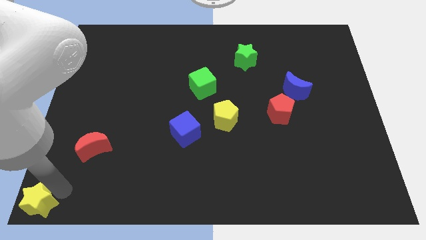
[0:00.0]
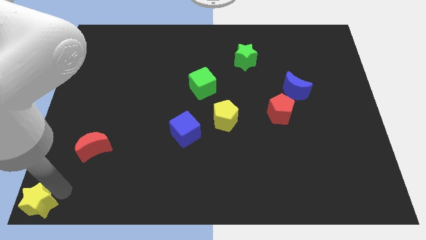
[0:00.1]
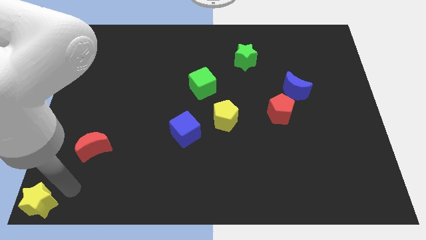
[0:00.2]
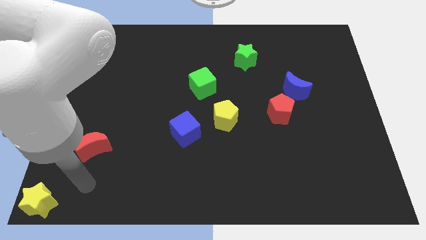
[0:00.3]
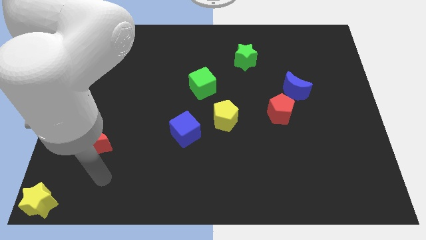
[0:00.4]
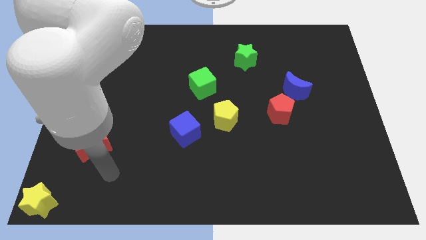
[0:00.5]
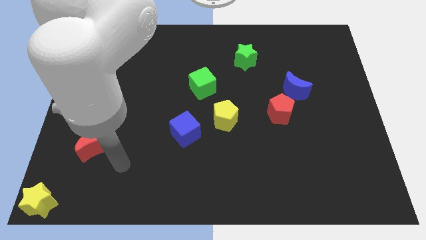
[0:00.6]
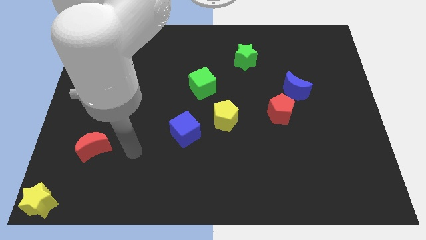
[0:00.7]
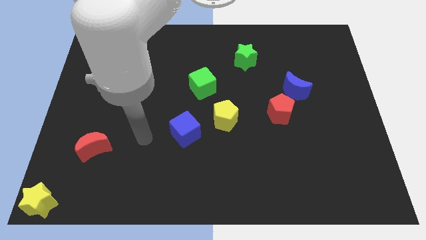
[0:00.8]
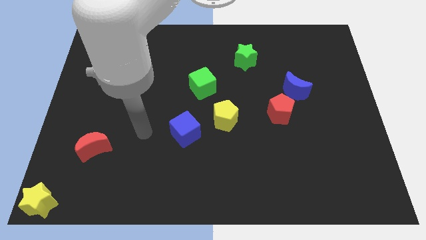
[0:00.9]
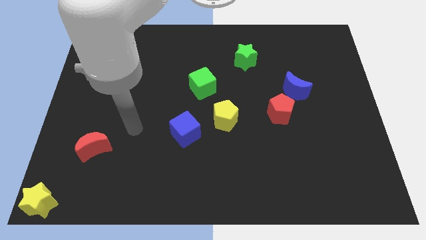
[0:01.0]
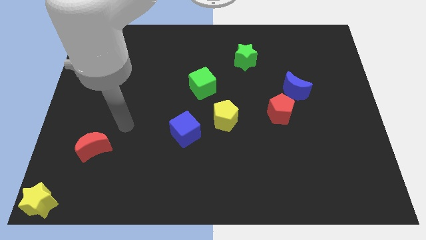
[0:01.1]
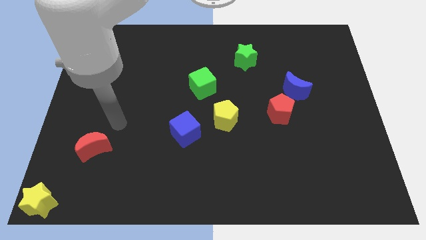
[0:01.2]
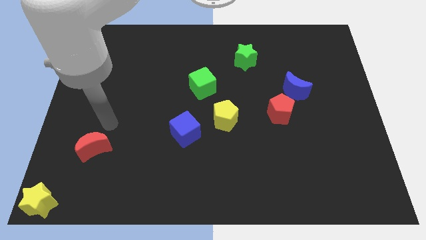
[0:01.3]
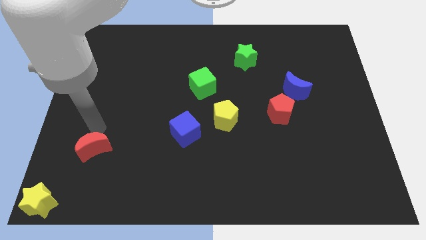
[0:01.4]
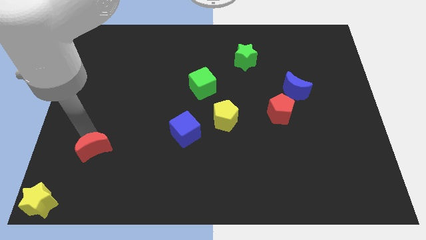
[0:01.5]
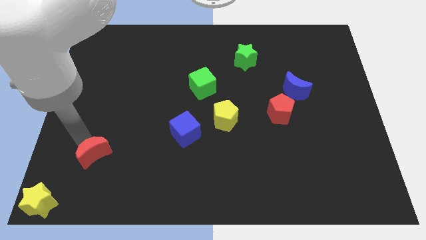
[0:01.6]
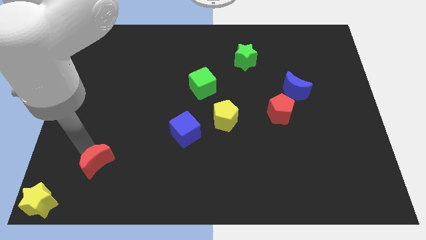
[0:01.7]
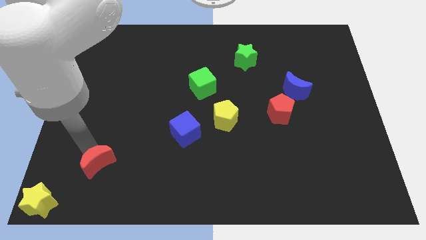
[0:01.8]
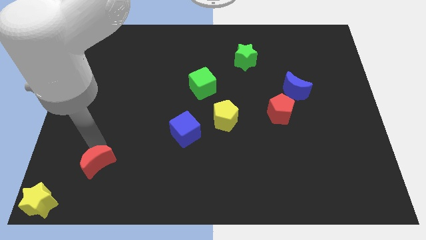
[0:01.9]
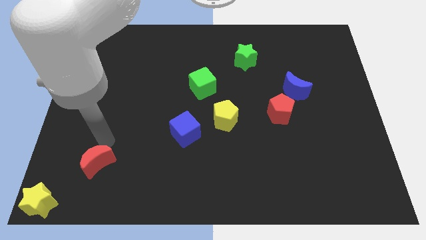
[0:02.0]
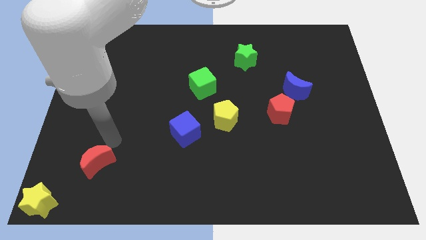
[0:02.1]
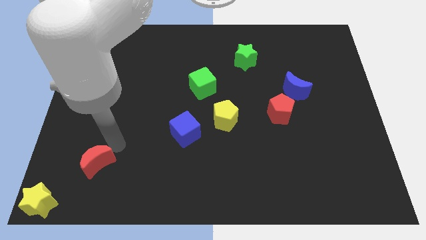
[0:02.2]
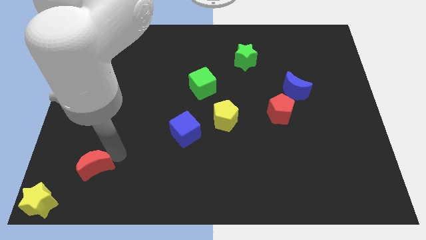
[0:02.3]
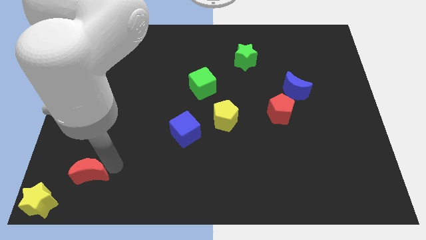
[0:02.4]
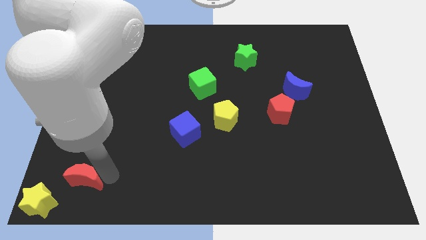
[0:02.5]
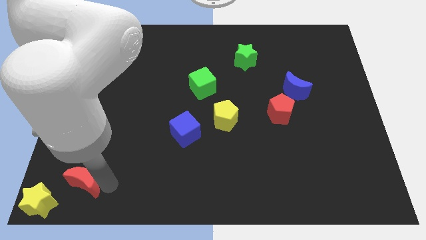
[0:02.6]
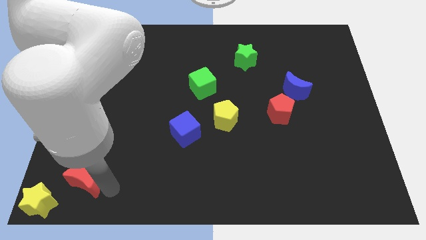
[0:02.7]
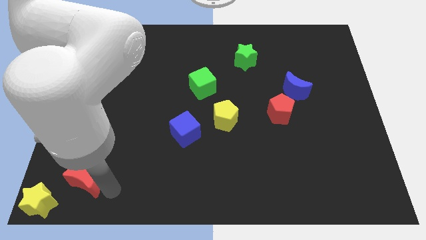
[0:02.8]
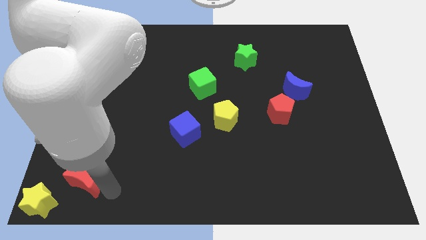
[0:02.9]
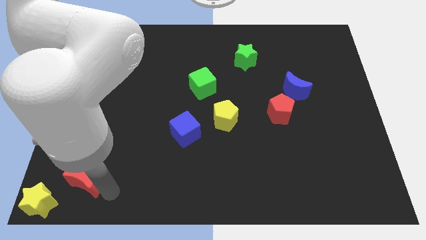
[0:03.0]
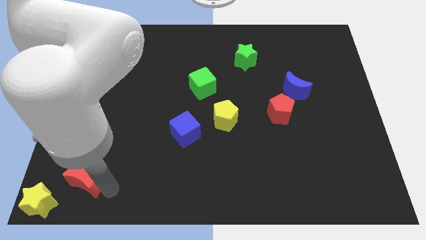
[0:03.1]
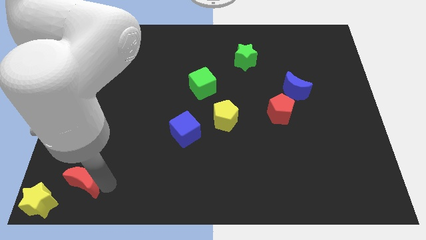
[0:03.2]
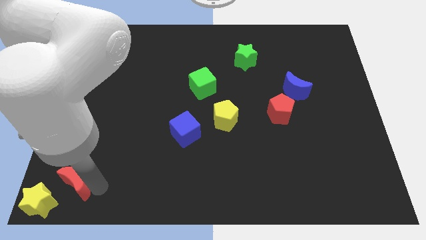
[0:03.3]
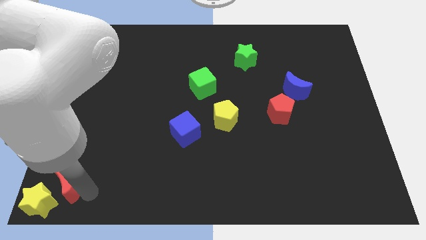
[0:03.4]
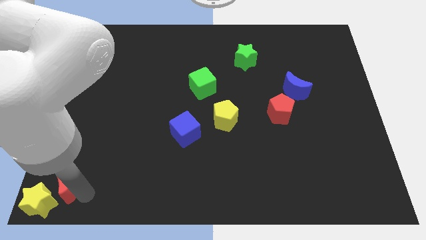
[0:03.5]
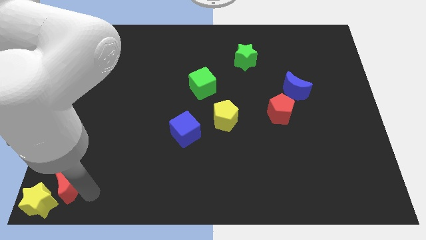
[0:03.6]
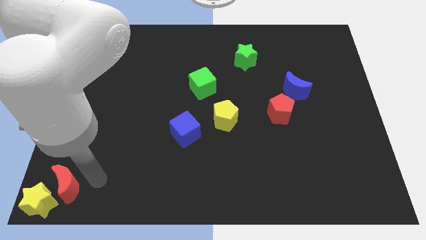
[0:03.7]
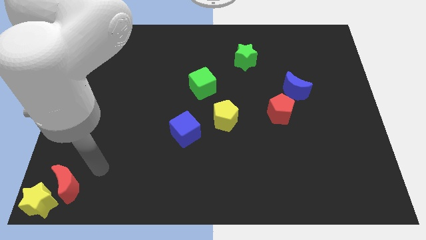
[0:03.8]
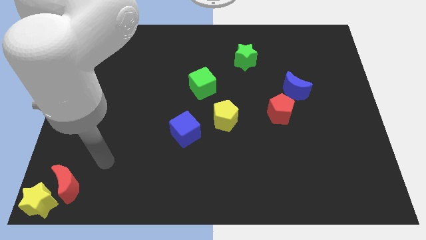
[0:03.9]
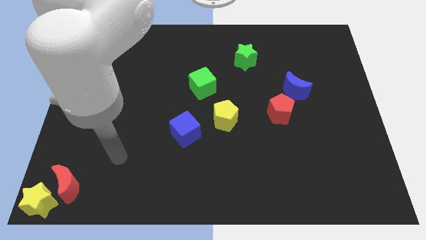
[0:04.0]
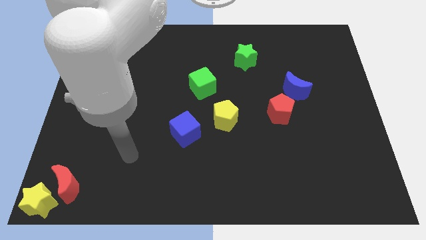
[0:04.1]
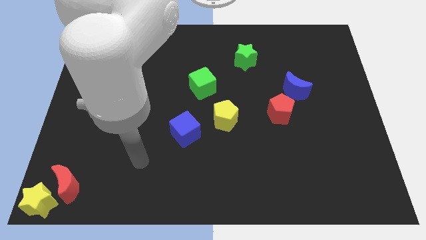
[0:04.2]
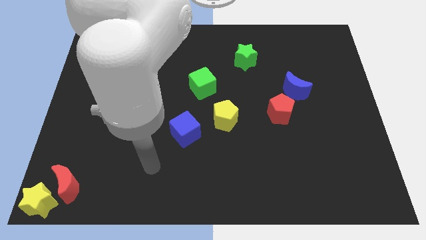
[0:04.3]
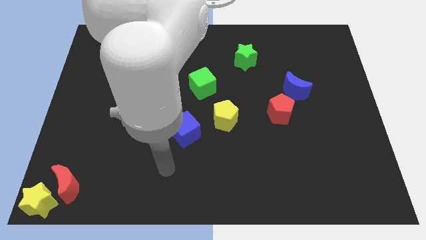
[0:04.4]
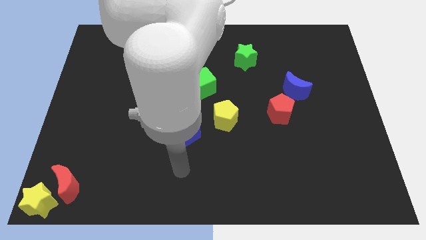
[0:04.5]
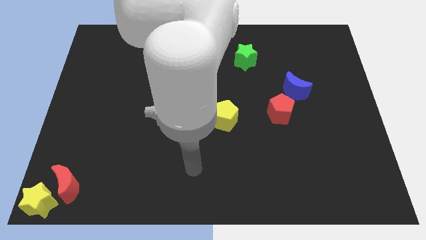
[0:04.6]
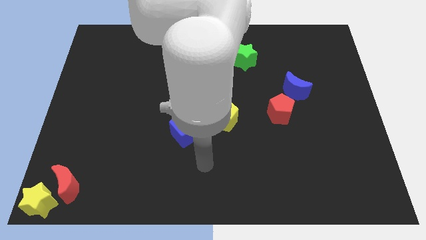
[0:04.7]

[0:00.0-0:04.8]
move the red crescent to the top right center of the board

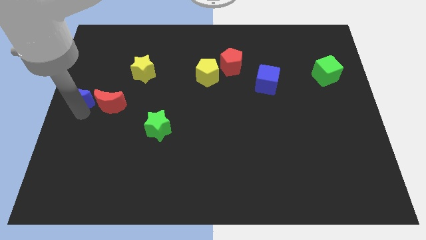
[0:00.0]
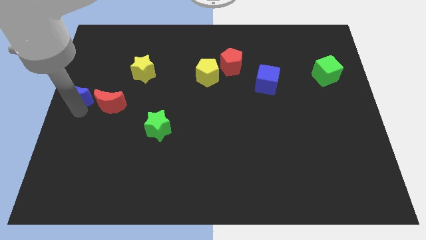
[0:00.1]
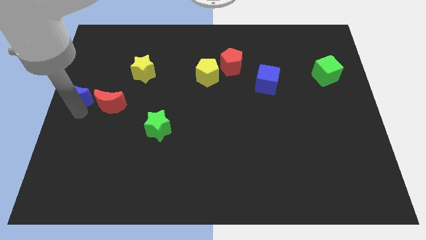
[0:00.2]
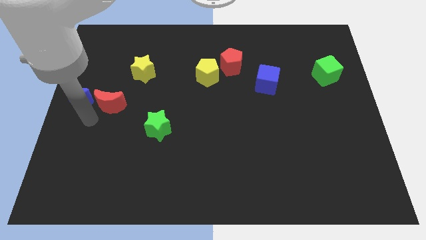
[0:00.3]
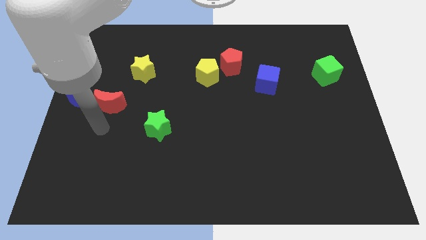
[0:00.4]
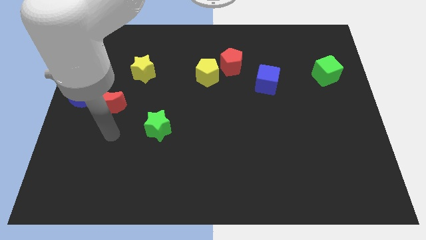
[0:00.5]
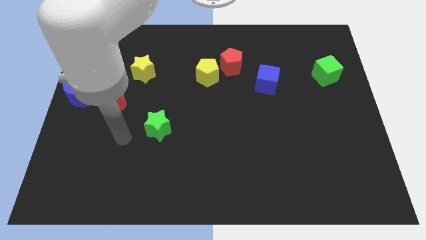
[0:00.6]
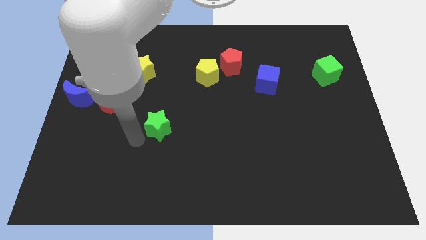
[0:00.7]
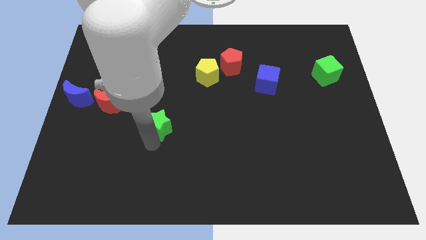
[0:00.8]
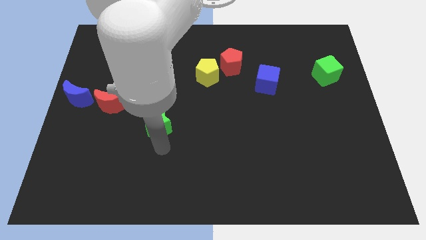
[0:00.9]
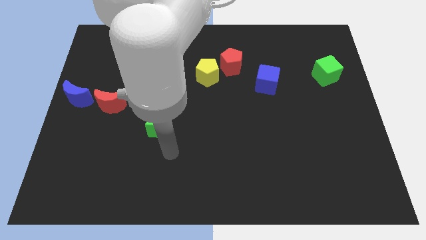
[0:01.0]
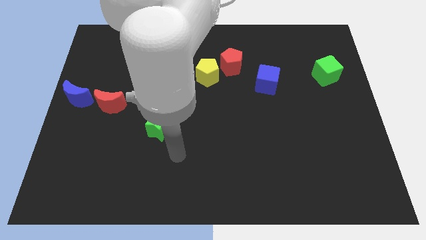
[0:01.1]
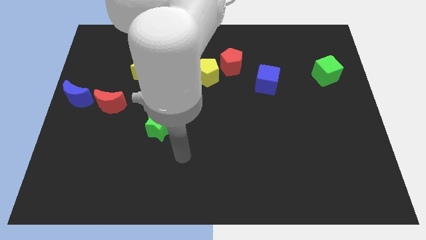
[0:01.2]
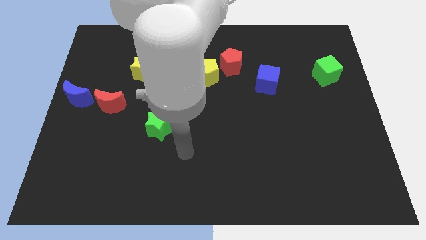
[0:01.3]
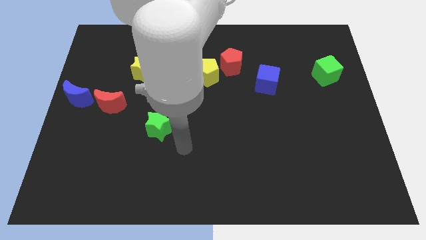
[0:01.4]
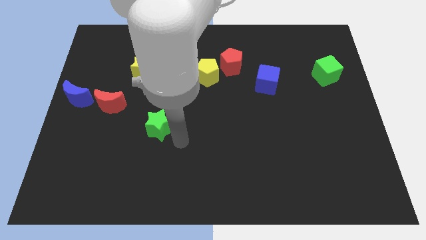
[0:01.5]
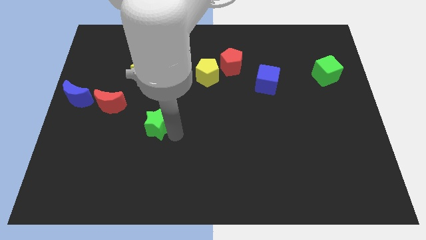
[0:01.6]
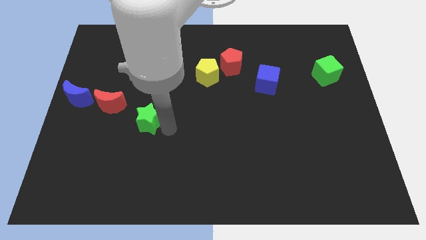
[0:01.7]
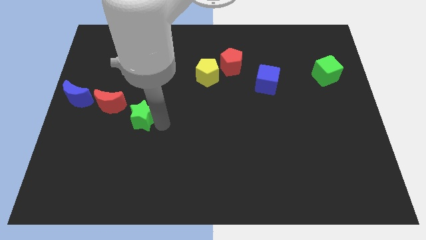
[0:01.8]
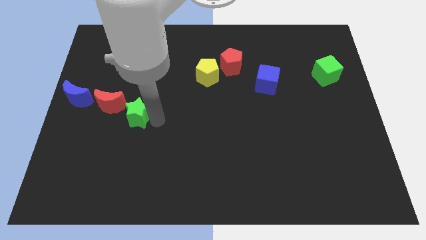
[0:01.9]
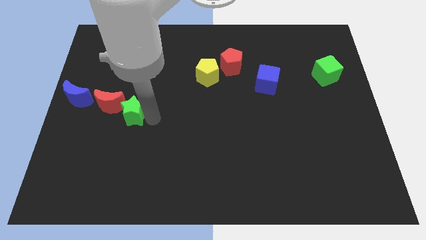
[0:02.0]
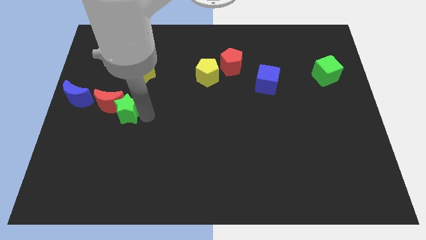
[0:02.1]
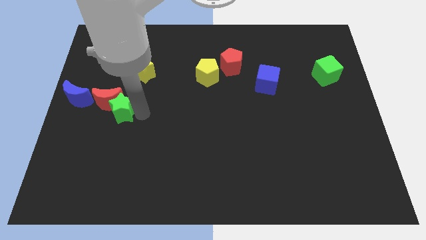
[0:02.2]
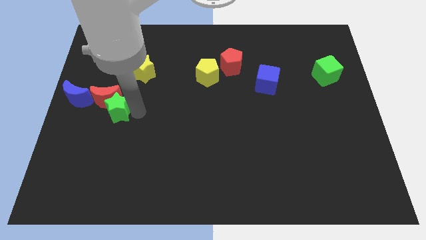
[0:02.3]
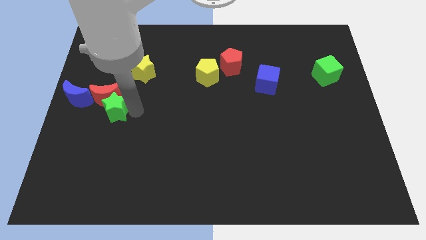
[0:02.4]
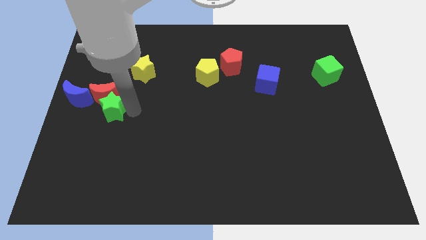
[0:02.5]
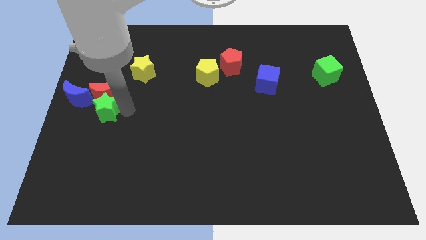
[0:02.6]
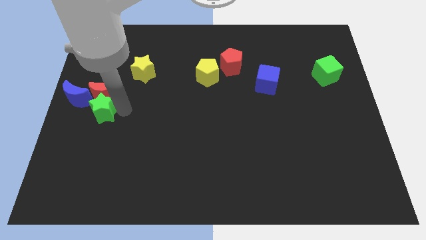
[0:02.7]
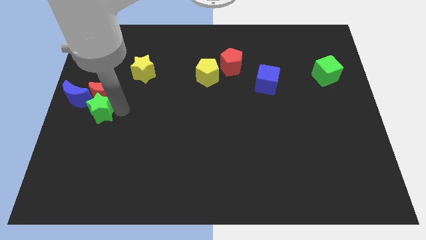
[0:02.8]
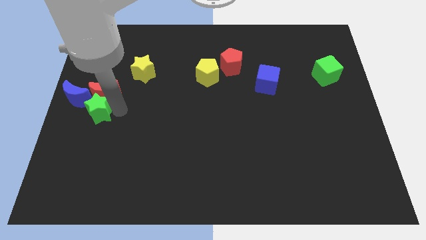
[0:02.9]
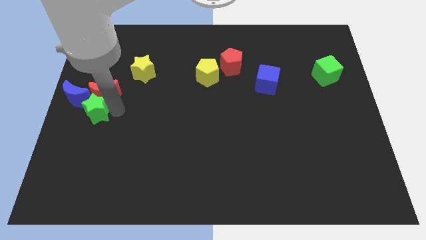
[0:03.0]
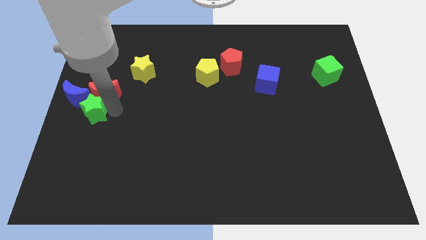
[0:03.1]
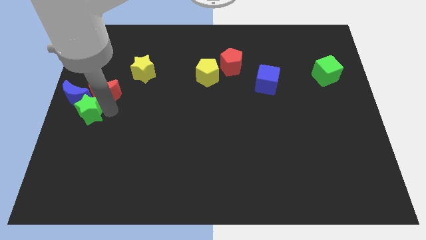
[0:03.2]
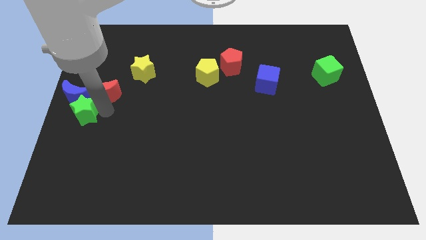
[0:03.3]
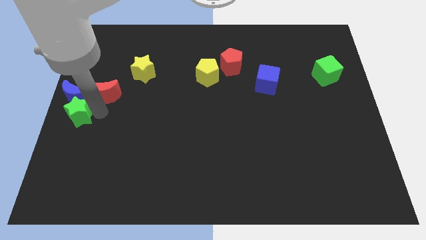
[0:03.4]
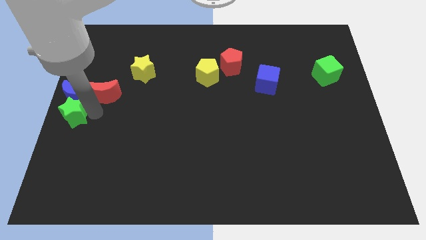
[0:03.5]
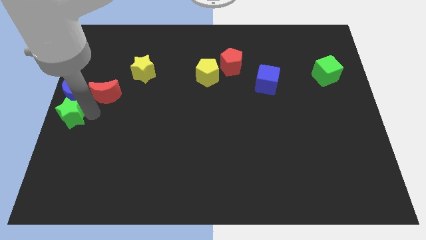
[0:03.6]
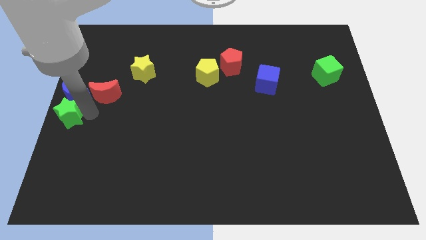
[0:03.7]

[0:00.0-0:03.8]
push the green star below the blue crescent

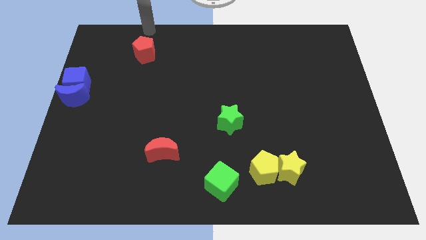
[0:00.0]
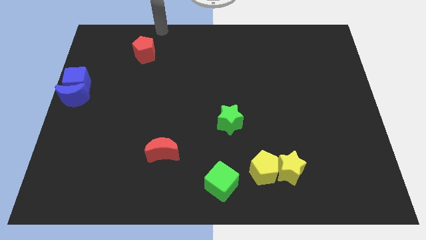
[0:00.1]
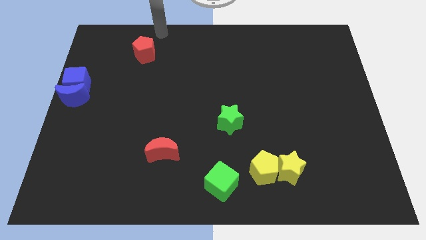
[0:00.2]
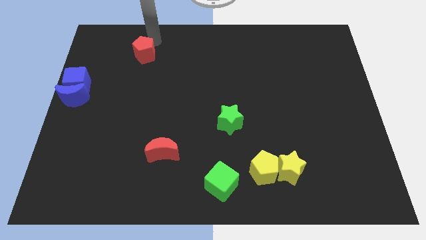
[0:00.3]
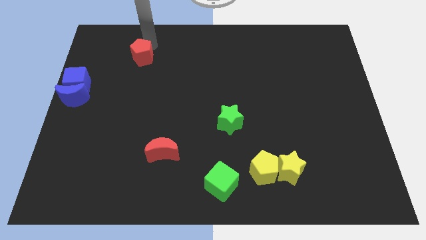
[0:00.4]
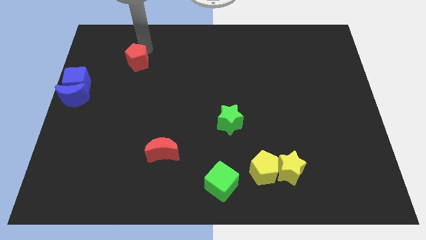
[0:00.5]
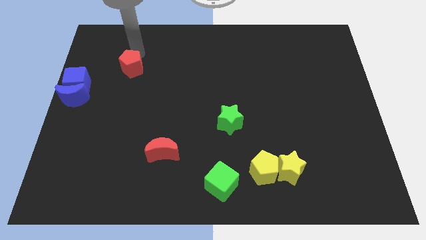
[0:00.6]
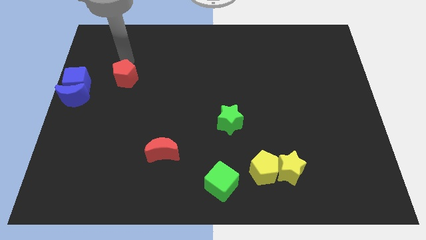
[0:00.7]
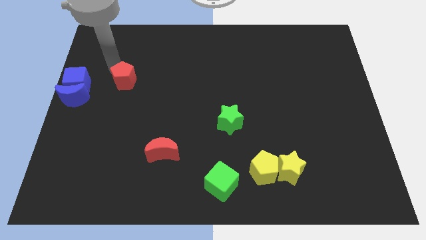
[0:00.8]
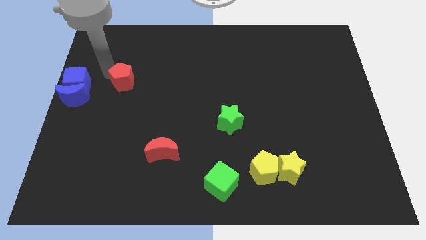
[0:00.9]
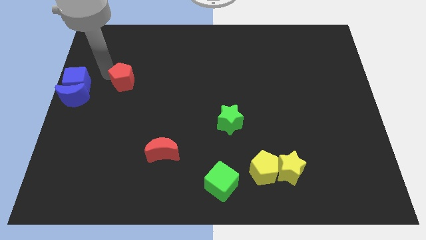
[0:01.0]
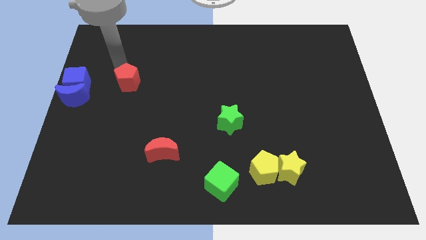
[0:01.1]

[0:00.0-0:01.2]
slide the red pentagon to the right of blue blocks
